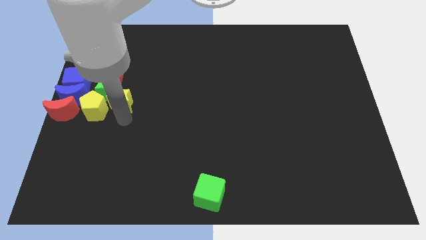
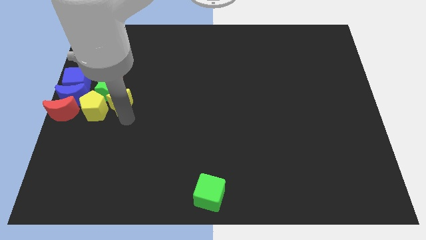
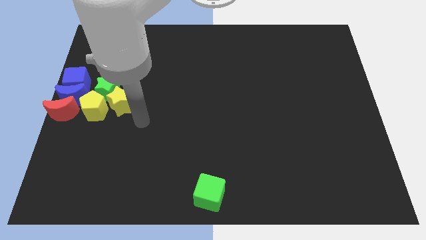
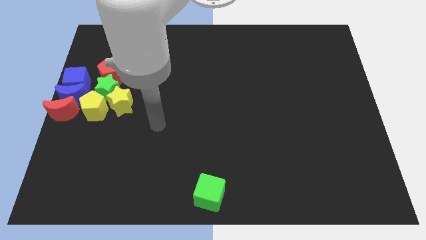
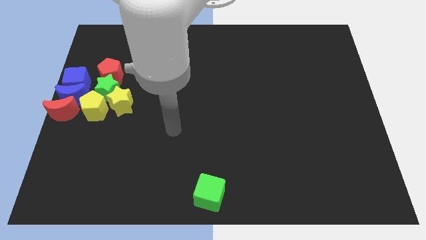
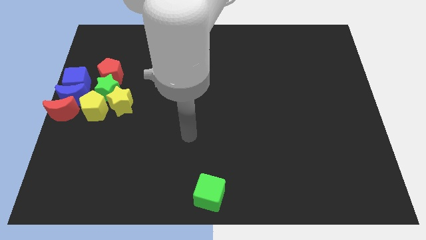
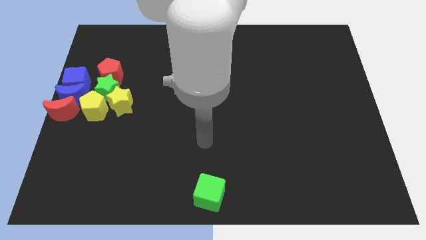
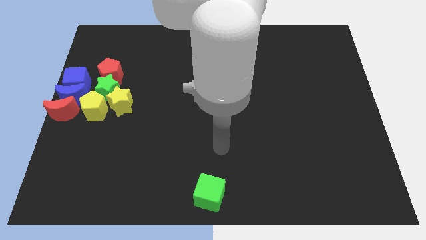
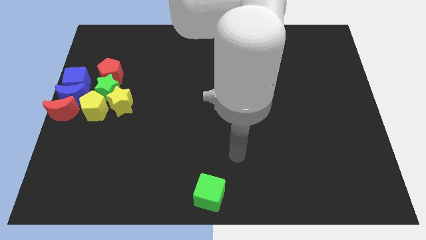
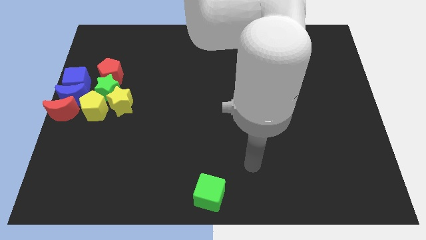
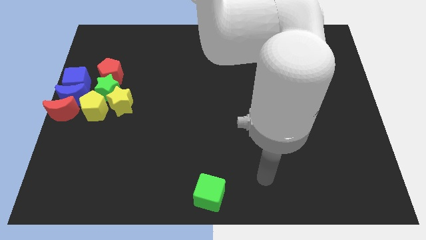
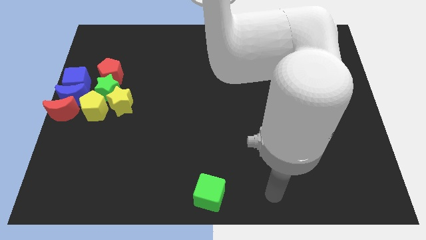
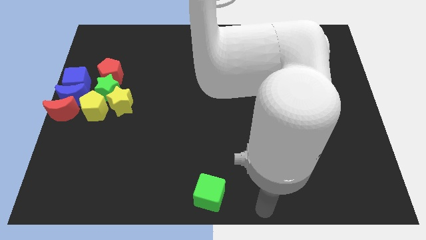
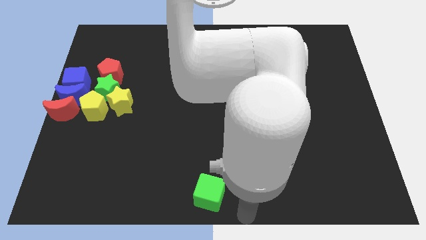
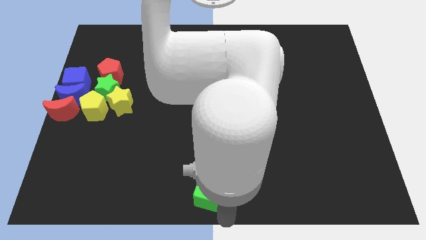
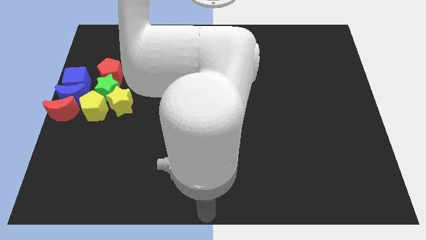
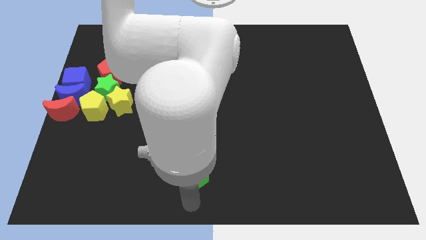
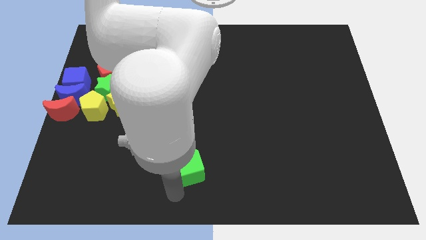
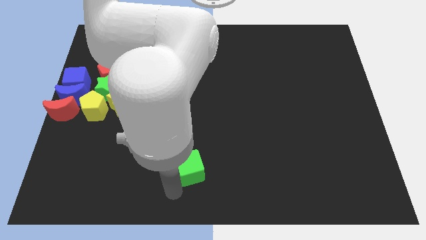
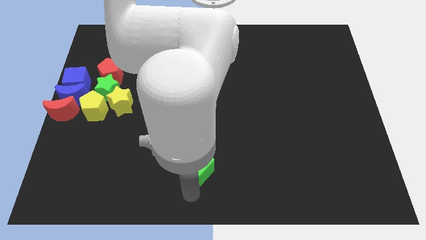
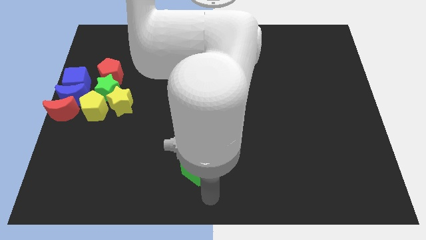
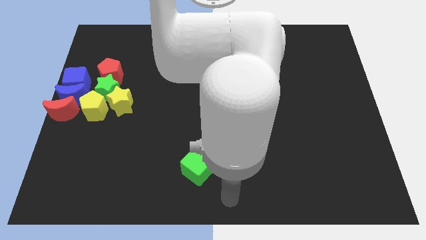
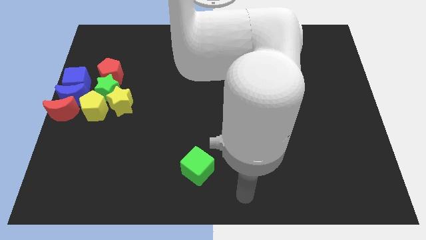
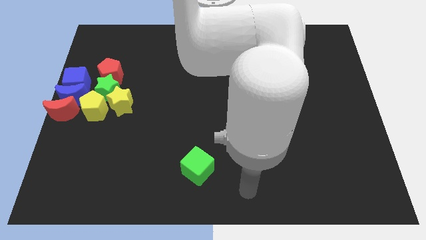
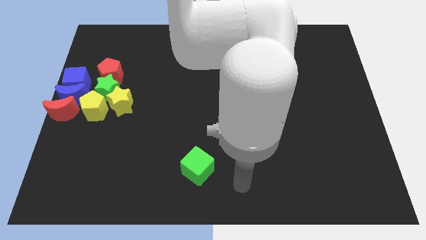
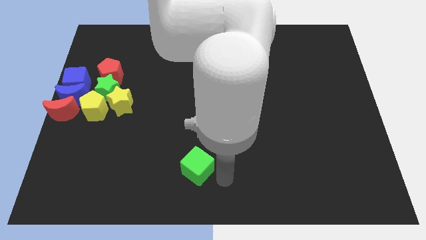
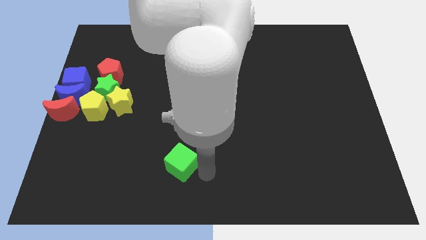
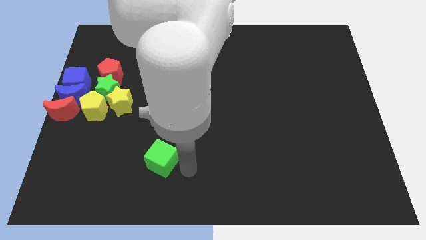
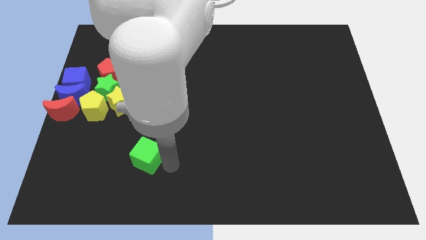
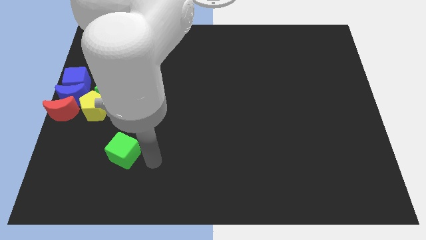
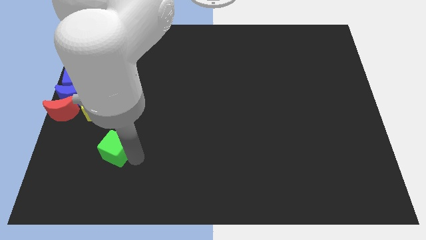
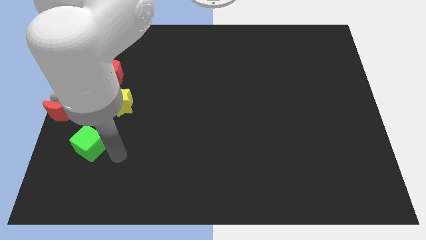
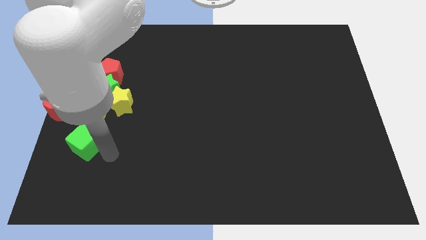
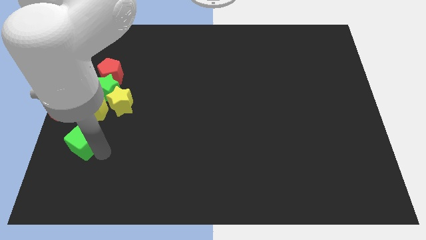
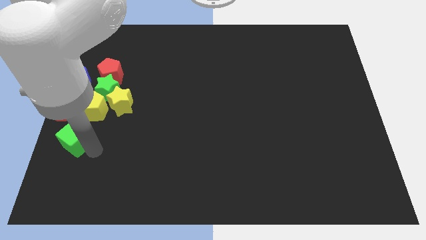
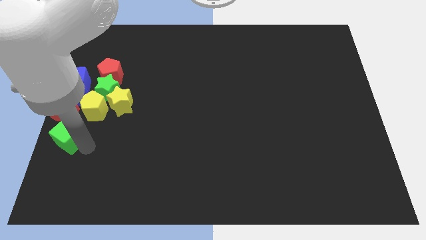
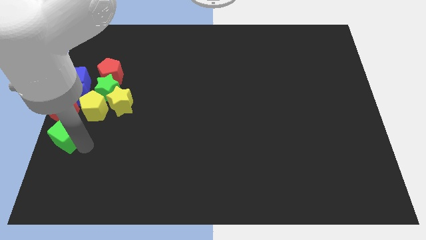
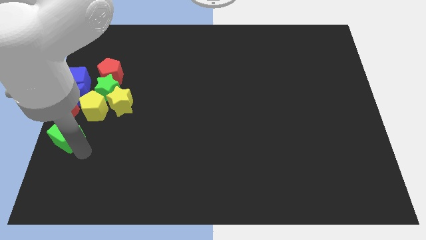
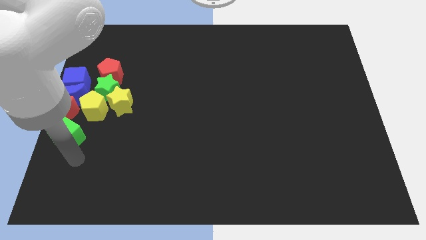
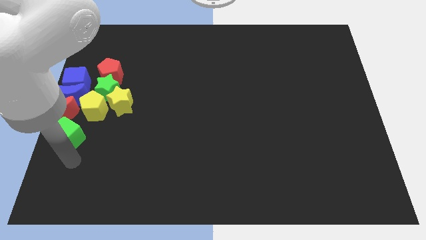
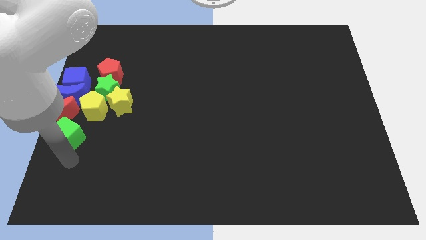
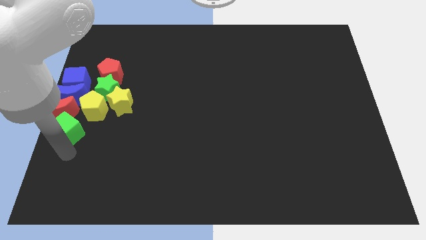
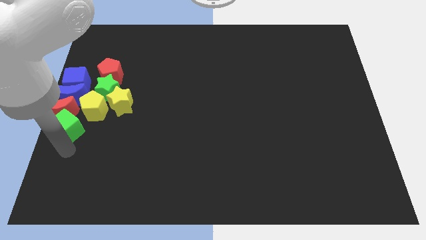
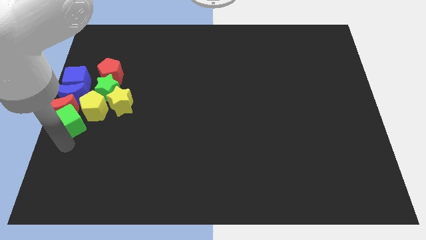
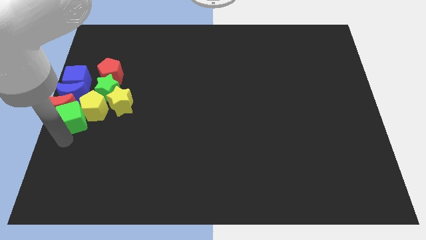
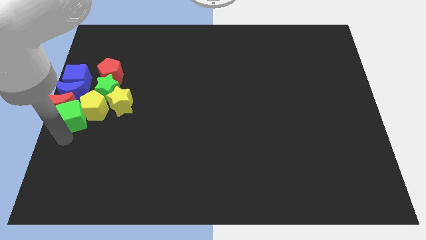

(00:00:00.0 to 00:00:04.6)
push the green cube into the red crescent

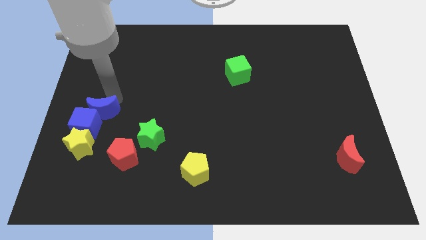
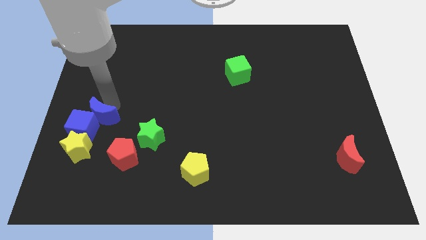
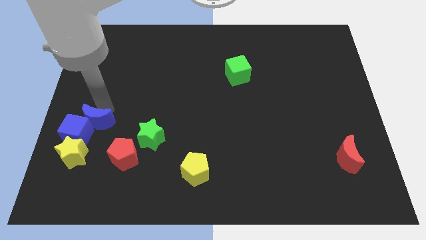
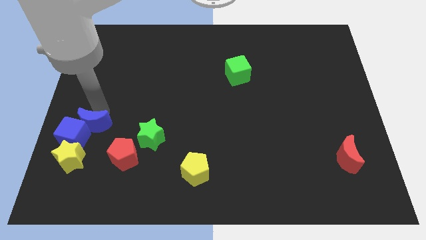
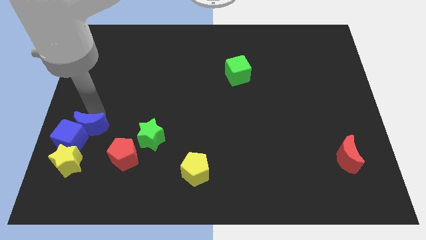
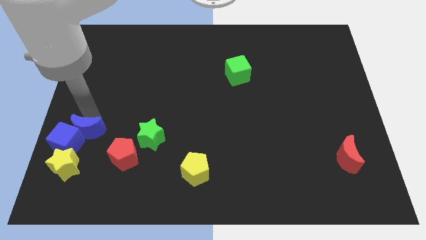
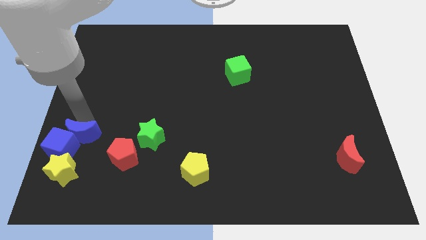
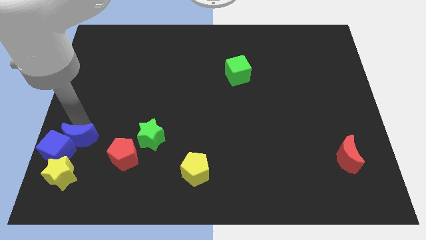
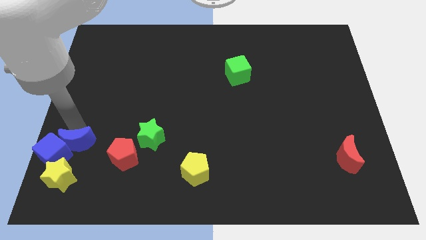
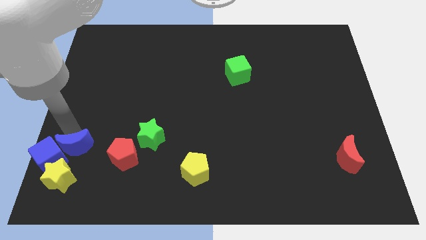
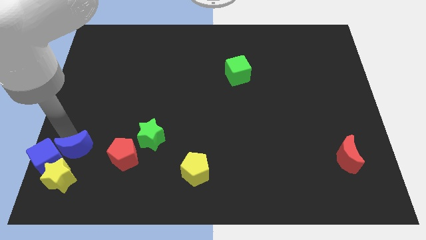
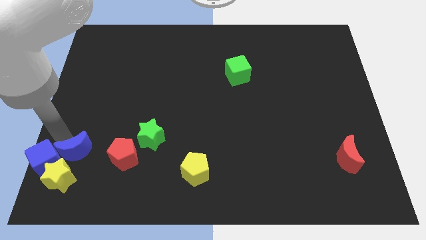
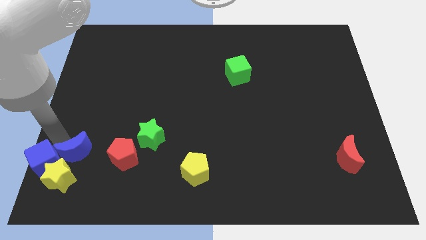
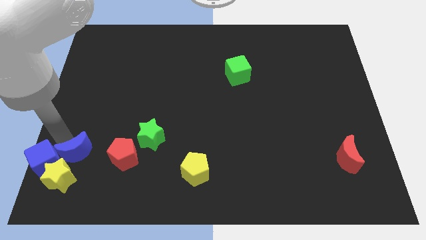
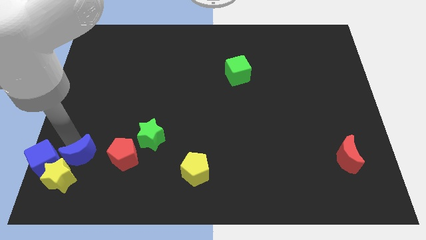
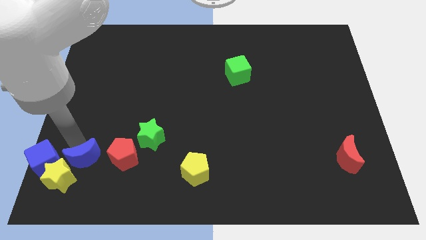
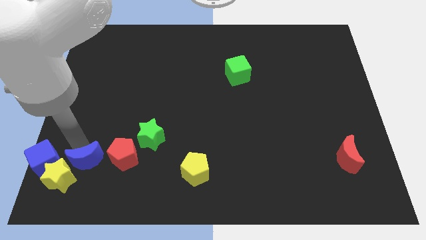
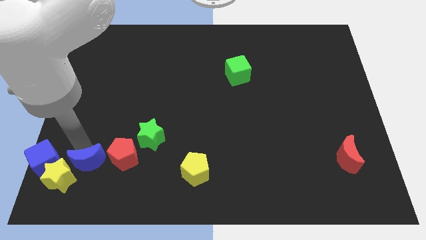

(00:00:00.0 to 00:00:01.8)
push the blue moon to the left side of the red pentagon

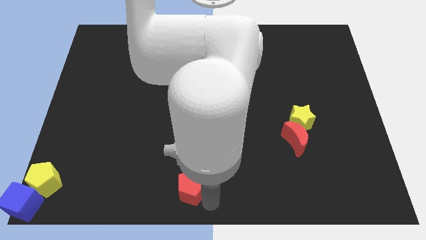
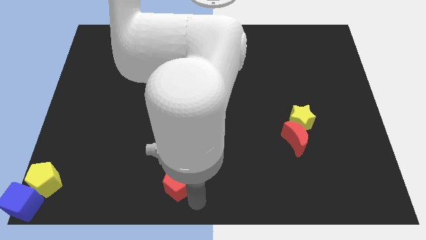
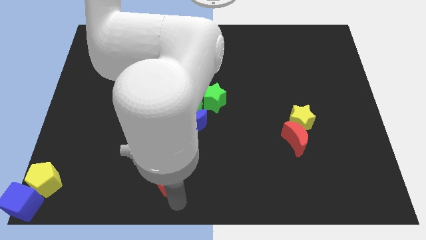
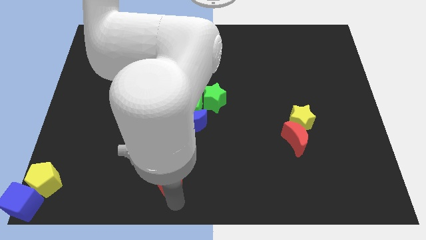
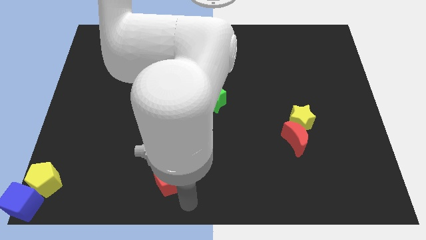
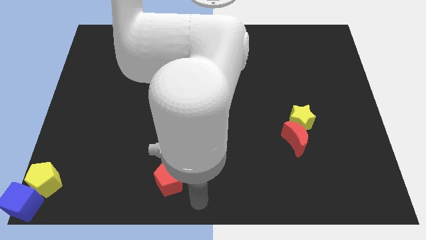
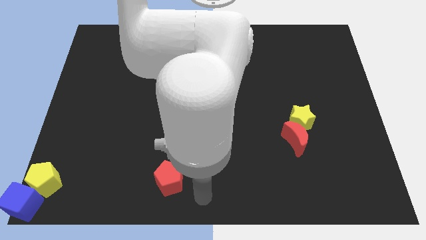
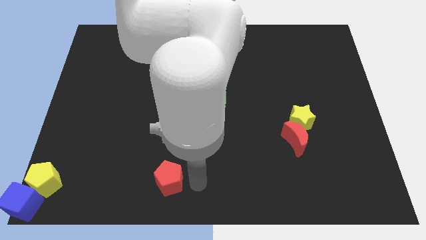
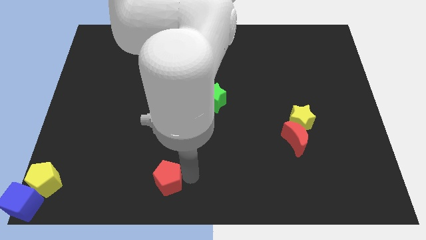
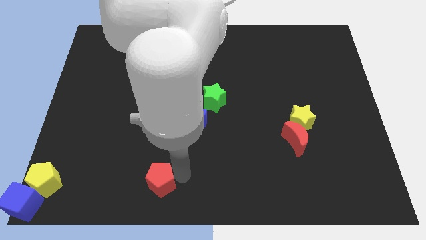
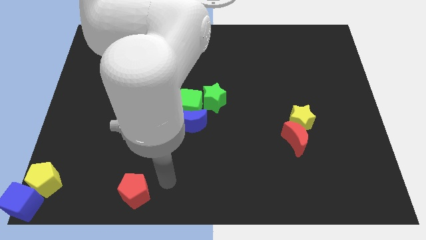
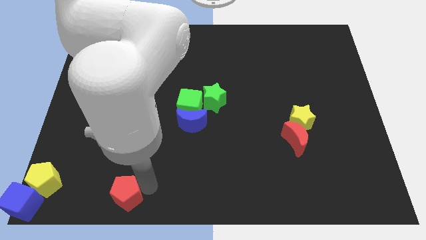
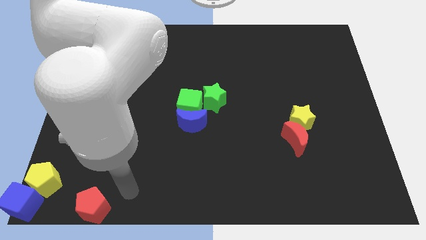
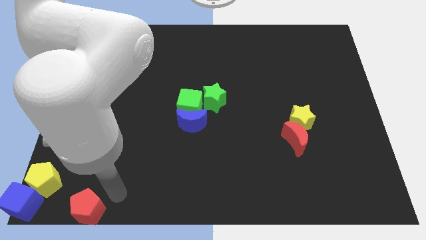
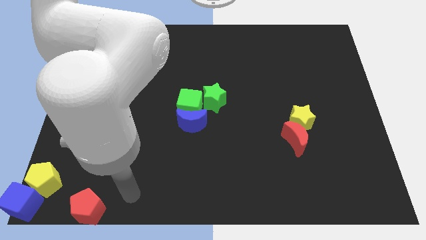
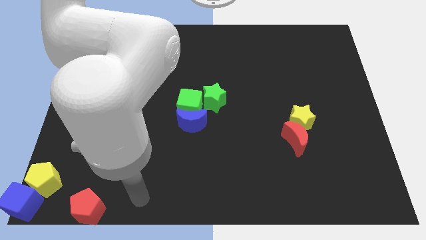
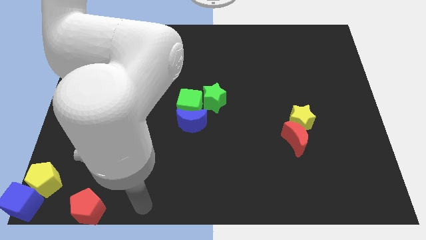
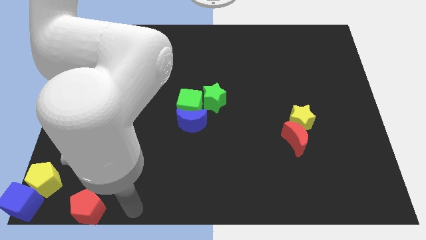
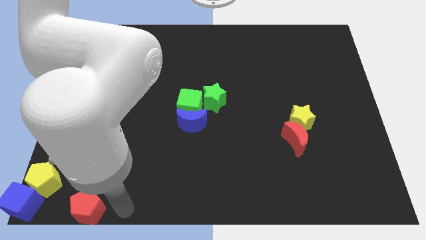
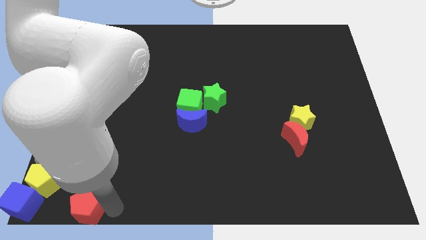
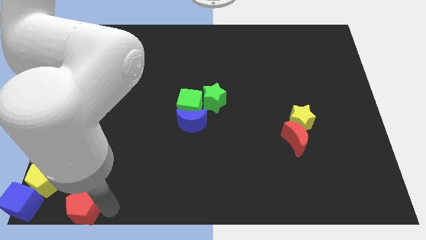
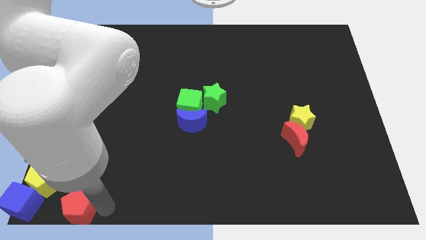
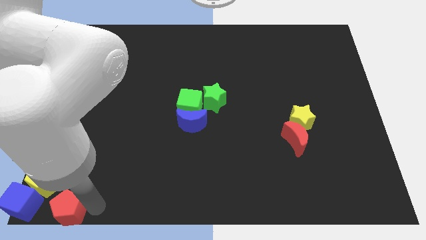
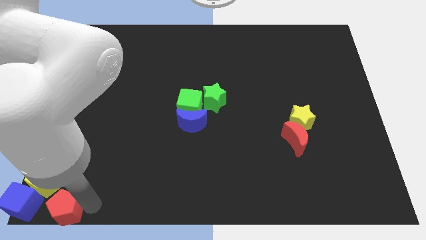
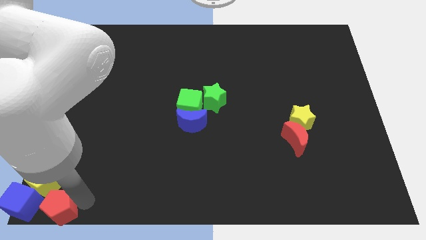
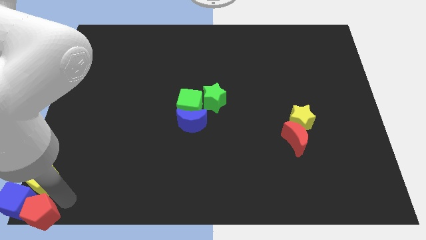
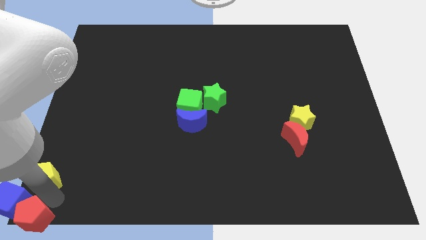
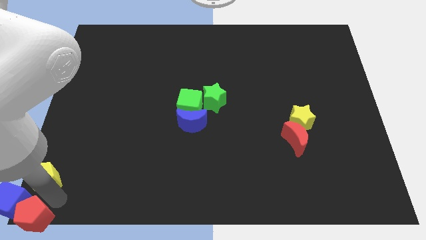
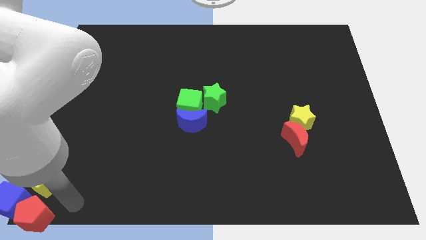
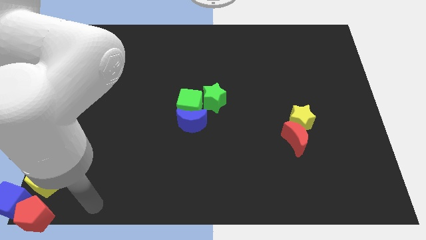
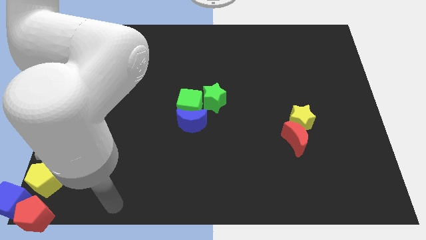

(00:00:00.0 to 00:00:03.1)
push red pentagon to the bottom left
